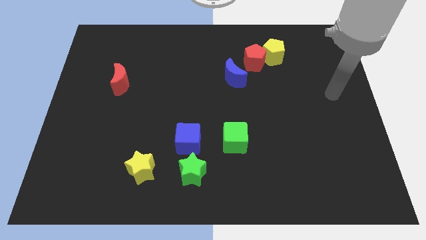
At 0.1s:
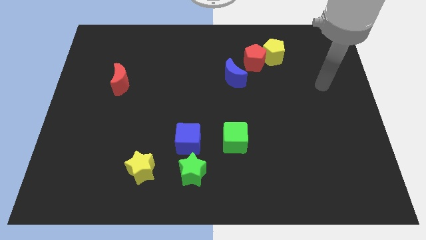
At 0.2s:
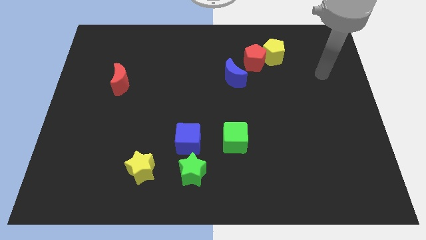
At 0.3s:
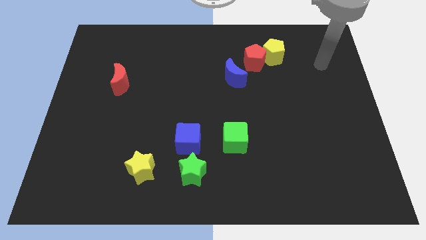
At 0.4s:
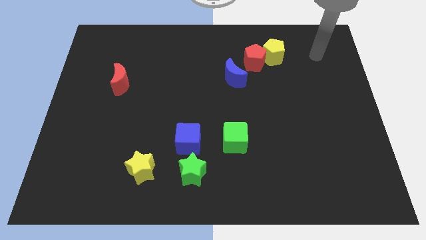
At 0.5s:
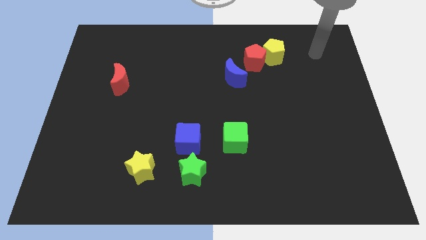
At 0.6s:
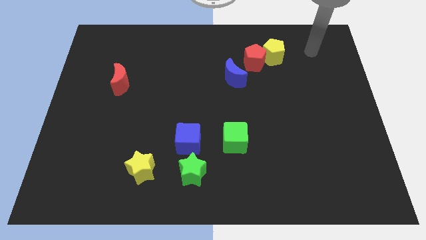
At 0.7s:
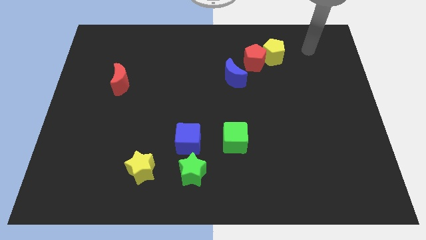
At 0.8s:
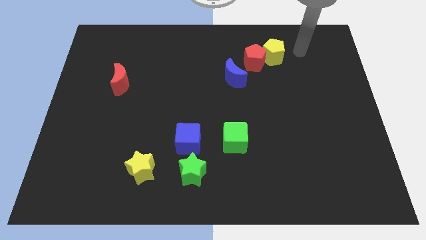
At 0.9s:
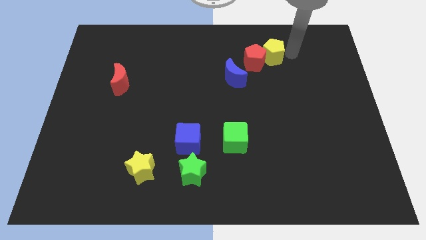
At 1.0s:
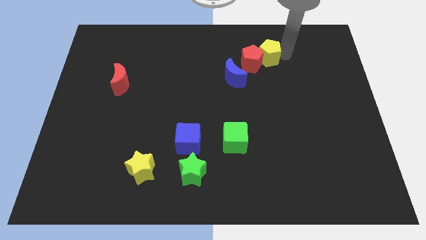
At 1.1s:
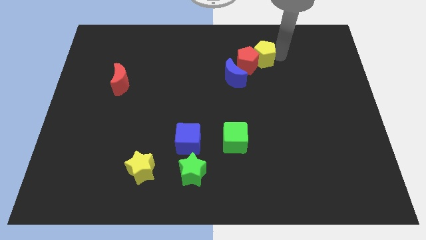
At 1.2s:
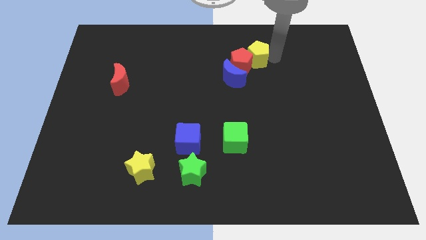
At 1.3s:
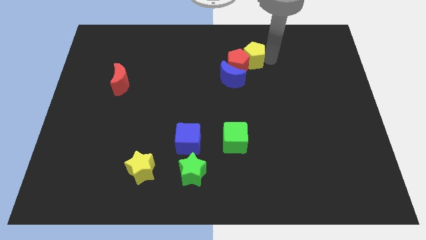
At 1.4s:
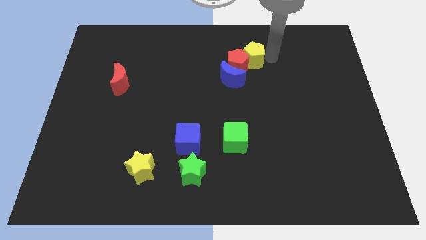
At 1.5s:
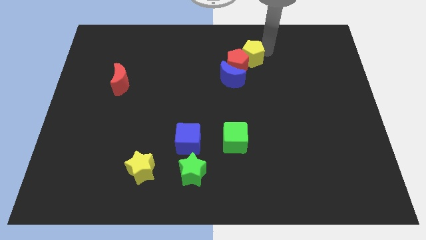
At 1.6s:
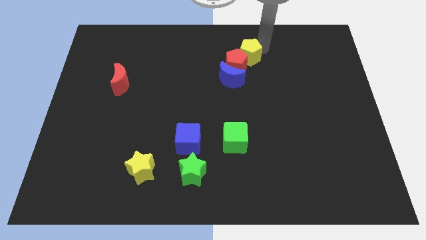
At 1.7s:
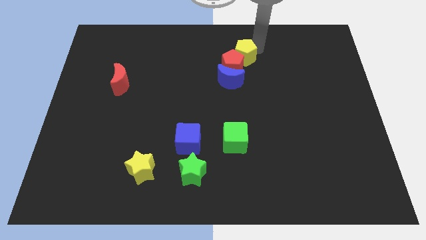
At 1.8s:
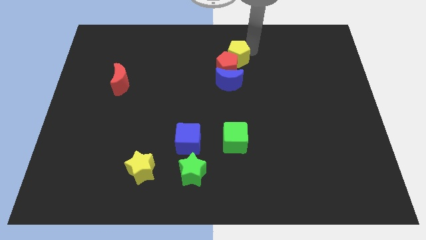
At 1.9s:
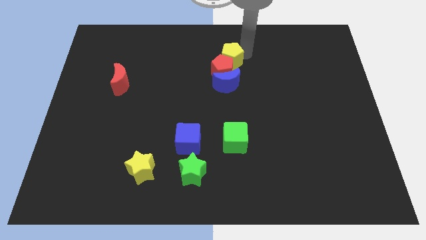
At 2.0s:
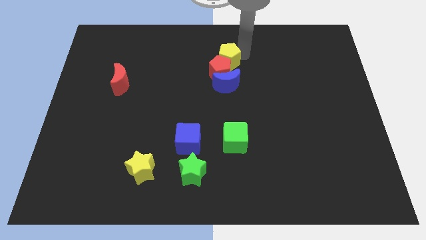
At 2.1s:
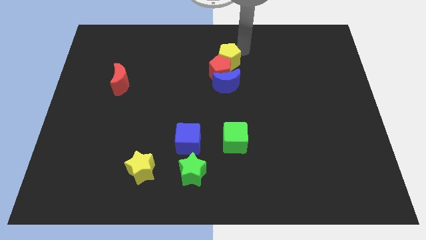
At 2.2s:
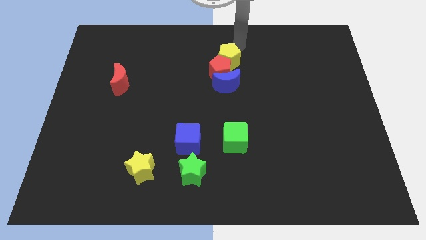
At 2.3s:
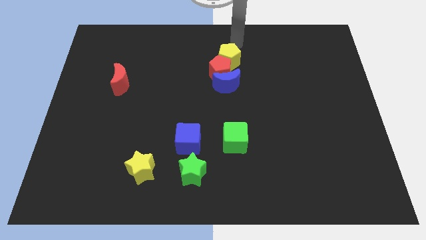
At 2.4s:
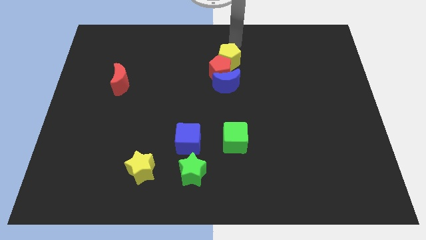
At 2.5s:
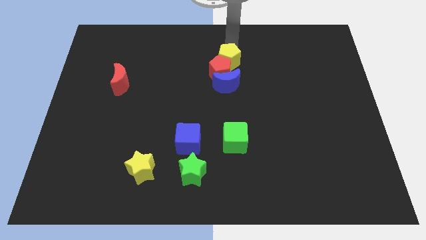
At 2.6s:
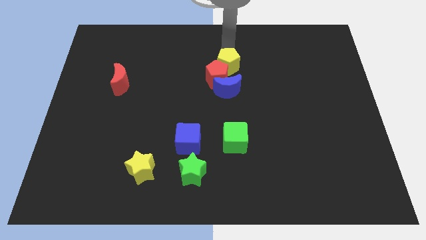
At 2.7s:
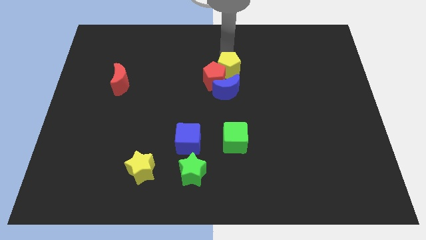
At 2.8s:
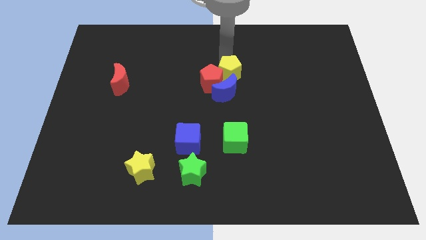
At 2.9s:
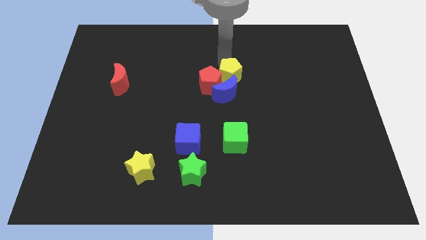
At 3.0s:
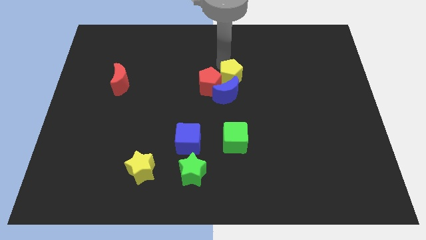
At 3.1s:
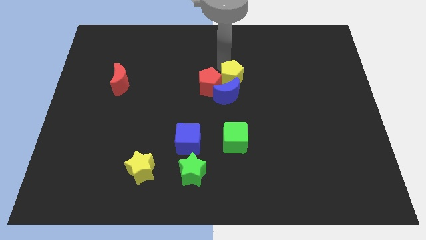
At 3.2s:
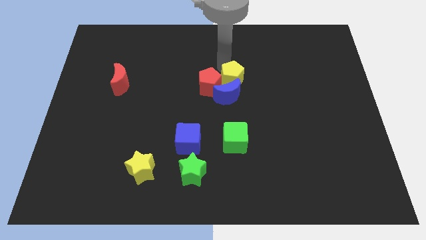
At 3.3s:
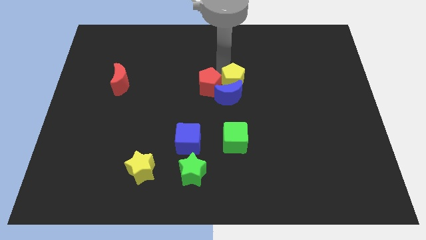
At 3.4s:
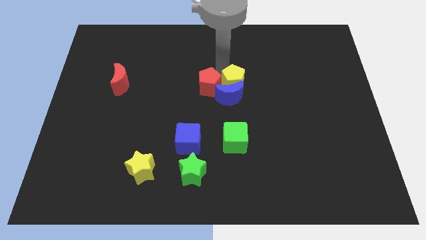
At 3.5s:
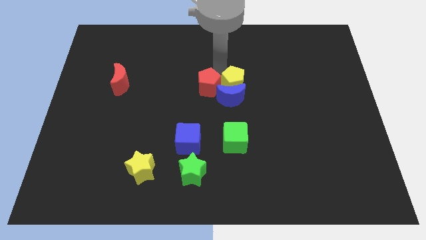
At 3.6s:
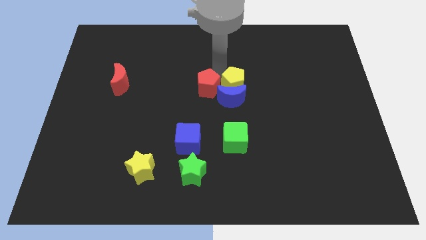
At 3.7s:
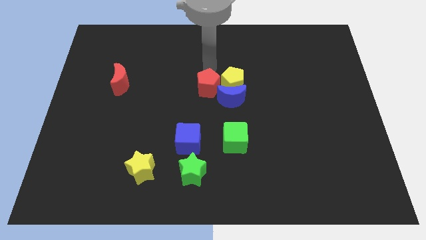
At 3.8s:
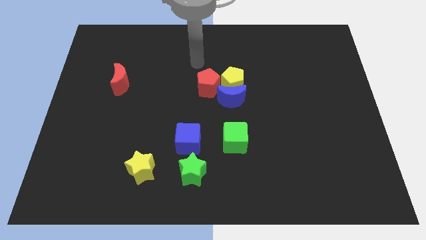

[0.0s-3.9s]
place the group of pentagons along with the blue moon at the center of the board

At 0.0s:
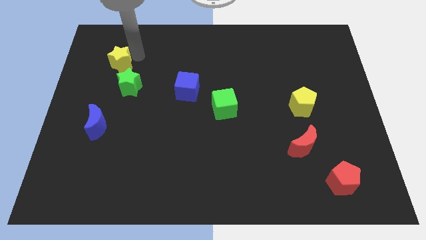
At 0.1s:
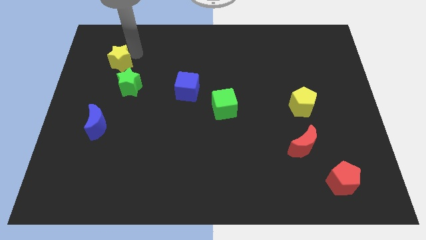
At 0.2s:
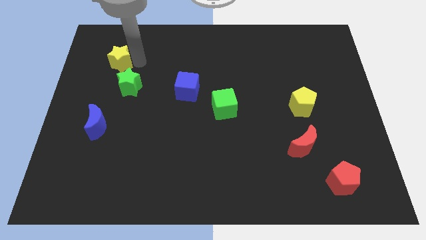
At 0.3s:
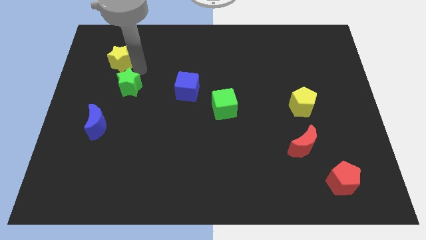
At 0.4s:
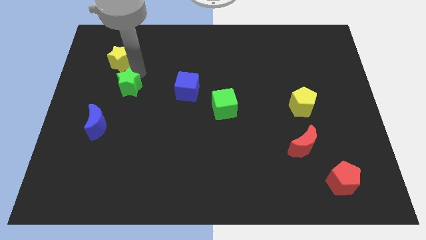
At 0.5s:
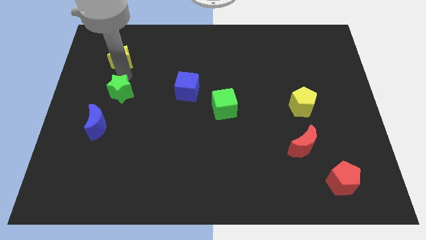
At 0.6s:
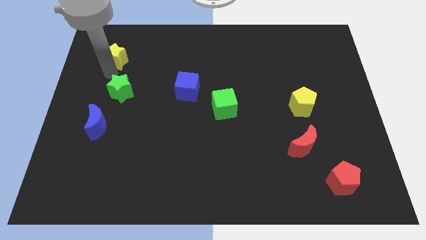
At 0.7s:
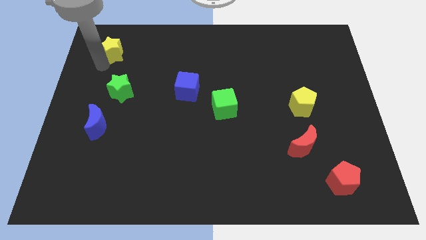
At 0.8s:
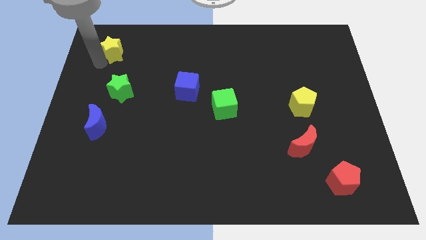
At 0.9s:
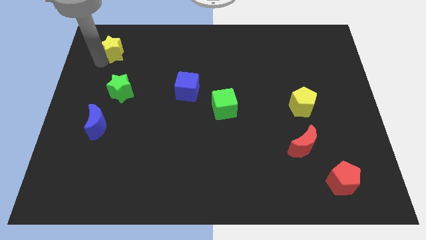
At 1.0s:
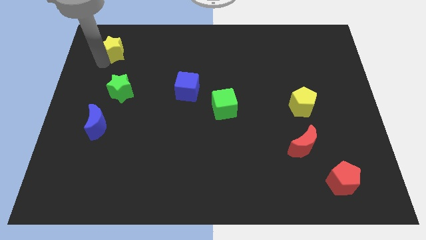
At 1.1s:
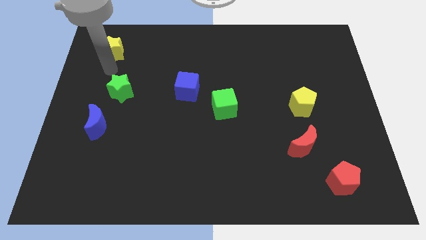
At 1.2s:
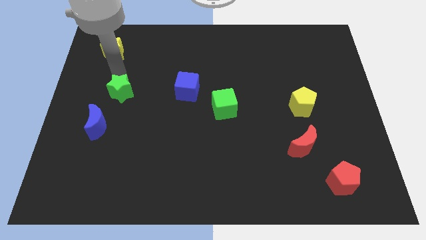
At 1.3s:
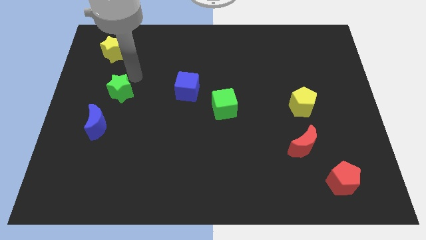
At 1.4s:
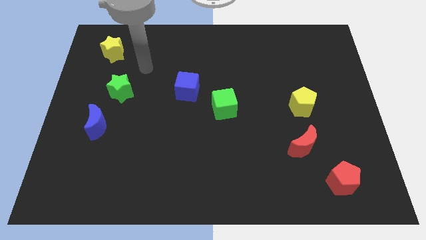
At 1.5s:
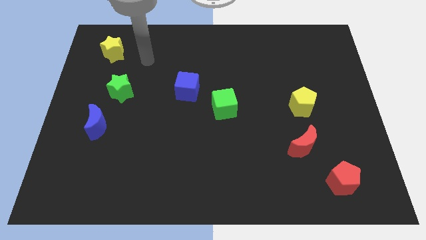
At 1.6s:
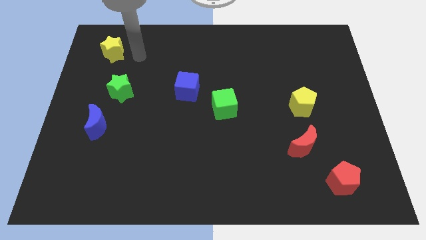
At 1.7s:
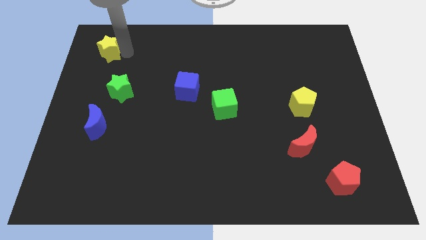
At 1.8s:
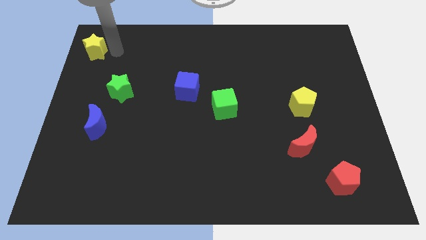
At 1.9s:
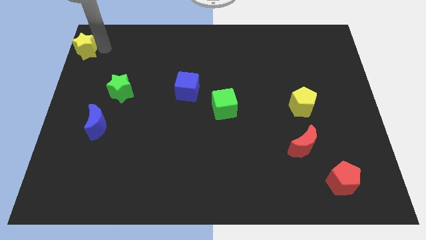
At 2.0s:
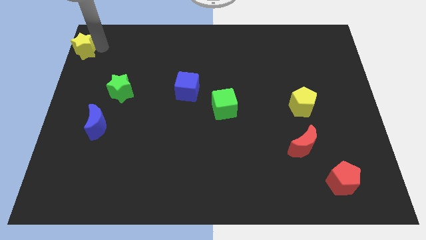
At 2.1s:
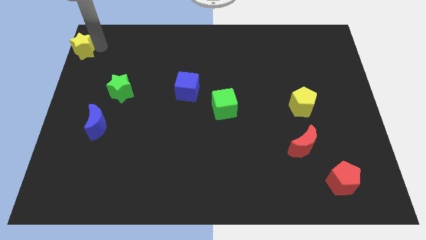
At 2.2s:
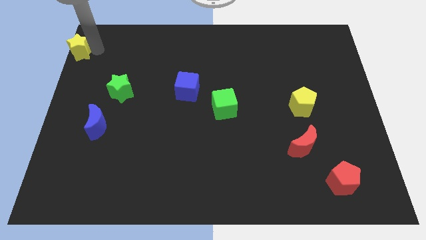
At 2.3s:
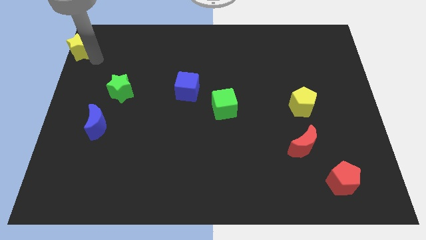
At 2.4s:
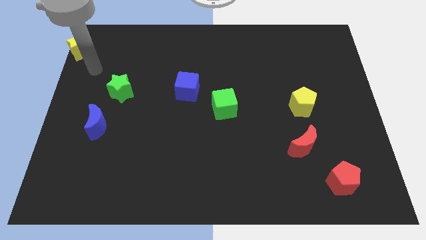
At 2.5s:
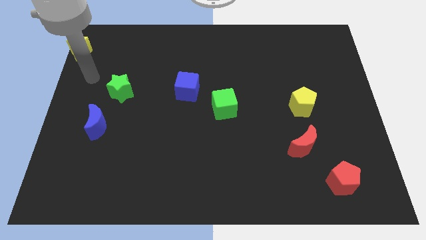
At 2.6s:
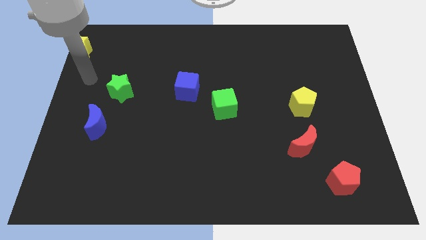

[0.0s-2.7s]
move the yellow star to the top left of the board

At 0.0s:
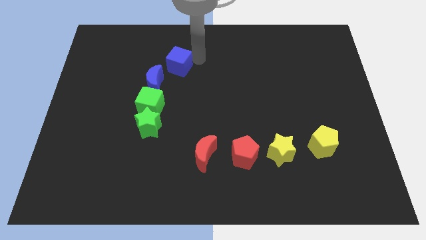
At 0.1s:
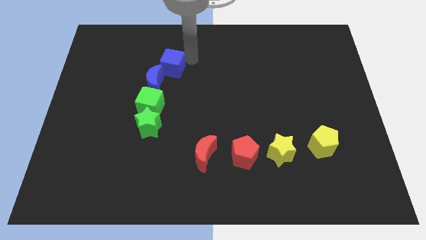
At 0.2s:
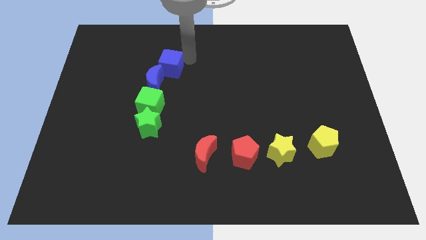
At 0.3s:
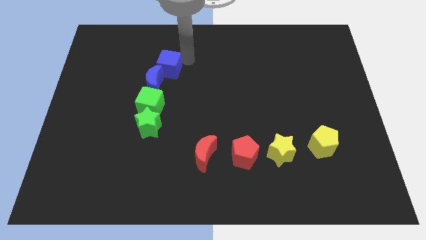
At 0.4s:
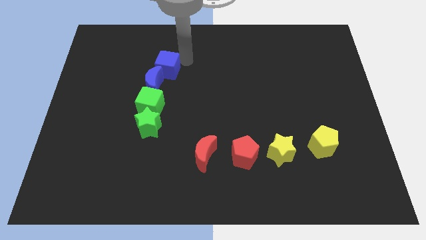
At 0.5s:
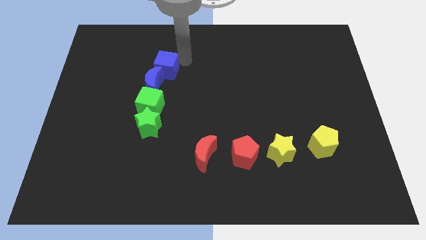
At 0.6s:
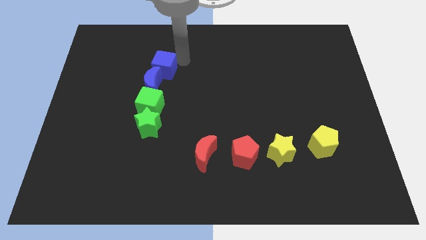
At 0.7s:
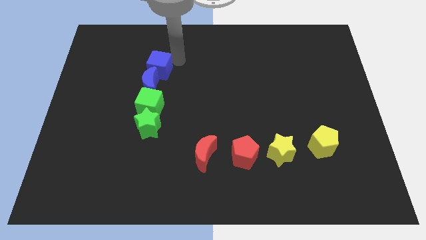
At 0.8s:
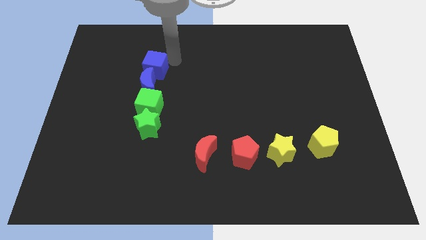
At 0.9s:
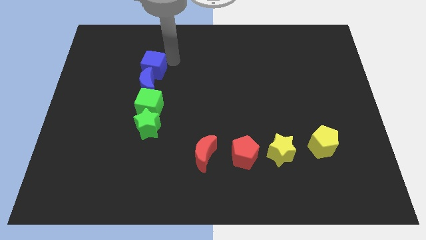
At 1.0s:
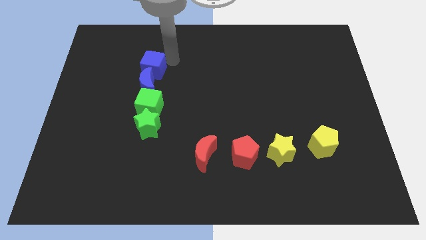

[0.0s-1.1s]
place blue cube to the top of blue moon

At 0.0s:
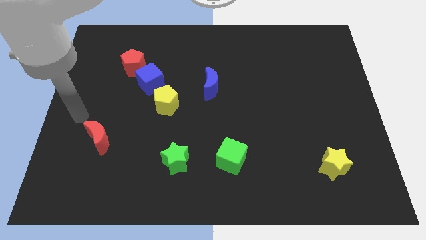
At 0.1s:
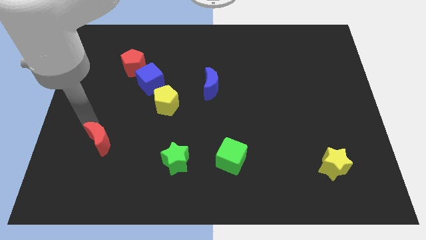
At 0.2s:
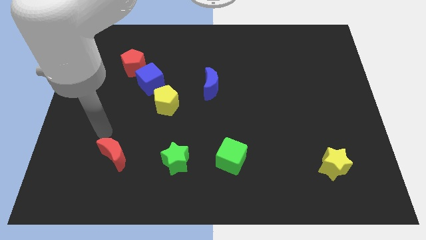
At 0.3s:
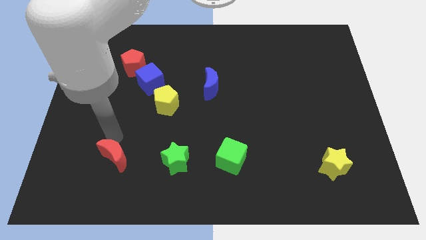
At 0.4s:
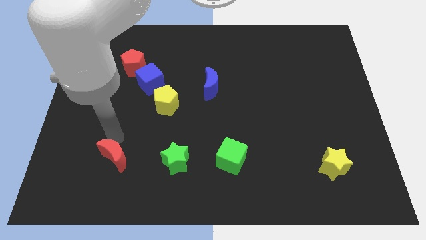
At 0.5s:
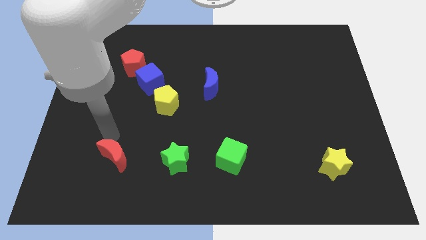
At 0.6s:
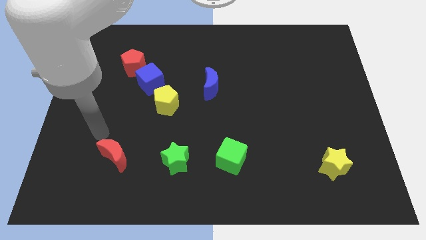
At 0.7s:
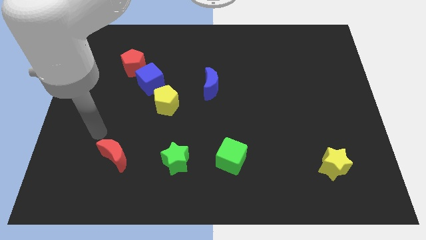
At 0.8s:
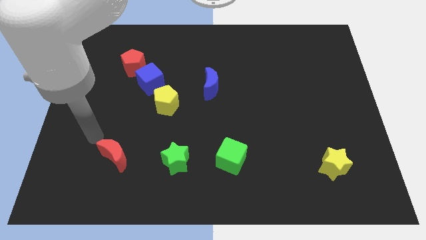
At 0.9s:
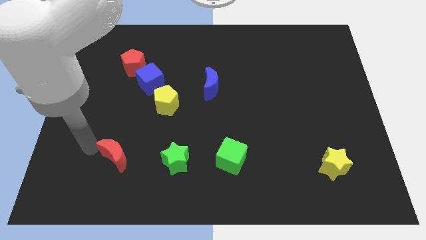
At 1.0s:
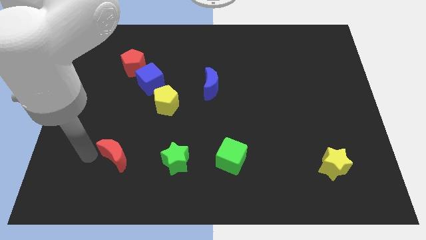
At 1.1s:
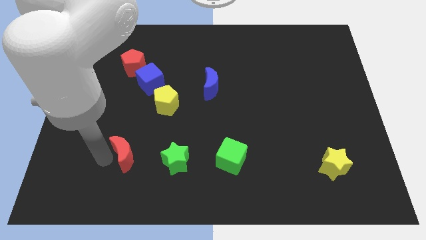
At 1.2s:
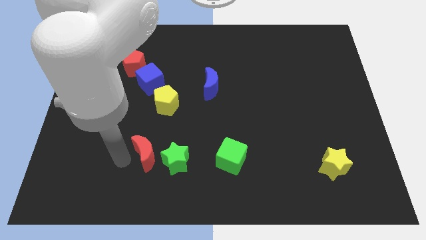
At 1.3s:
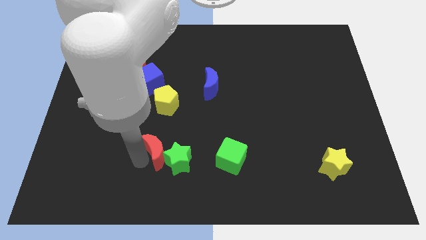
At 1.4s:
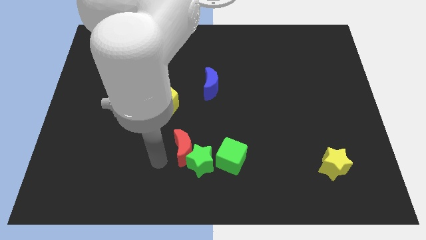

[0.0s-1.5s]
push the red crescent into the green star and green cube
